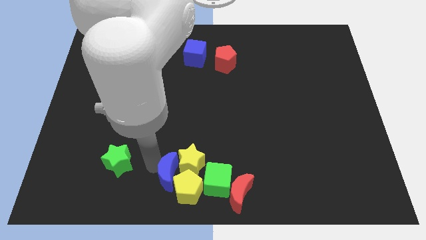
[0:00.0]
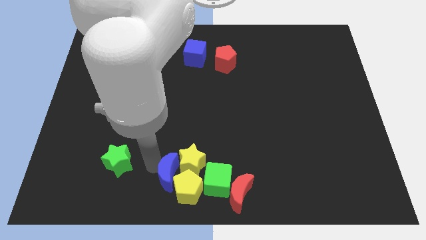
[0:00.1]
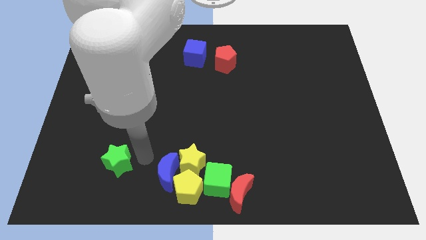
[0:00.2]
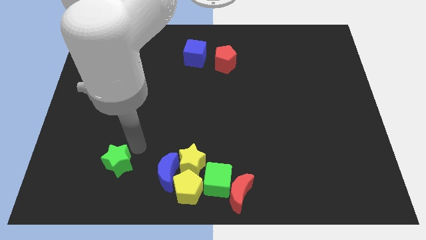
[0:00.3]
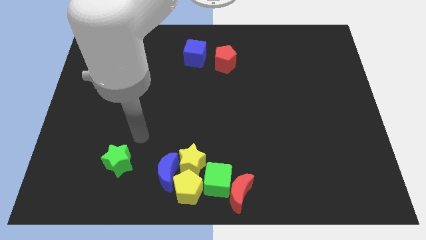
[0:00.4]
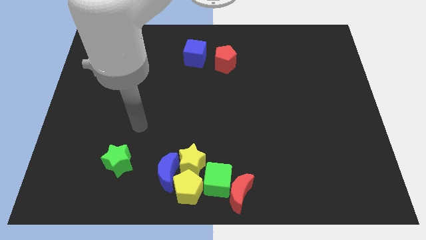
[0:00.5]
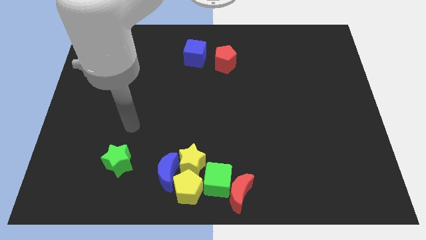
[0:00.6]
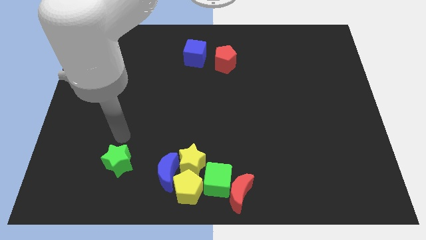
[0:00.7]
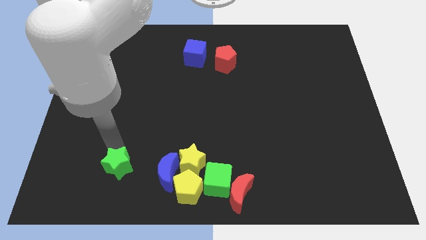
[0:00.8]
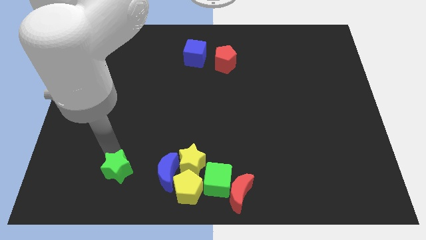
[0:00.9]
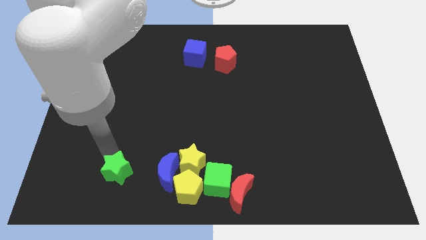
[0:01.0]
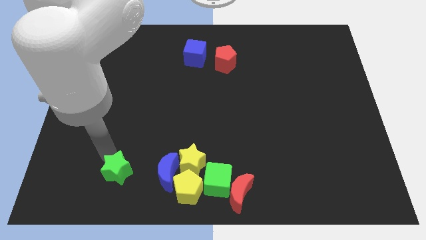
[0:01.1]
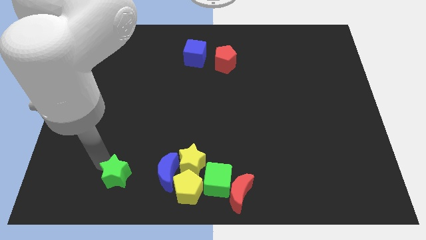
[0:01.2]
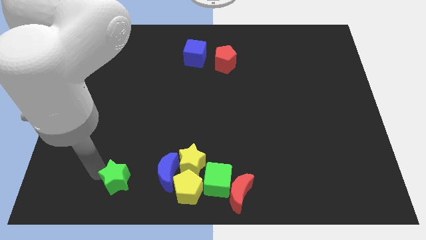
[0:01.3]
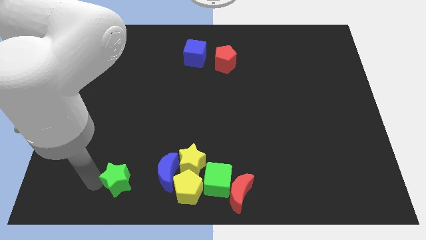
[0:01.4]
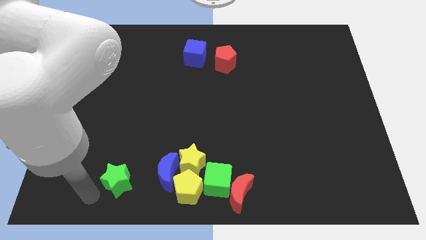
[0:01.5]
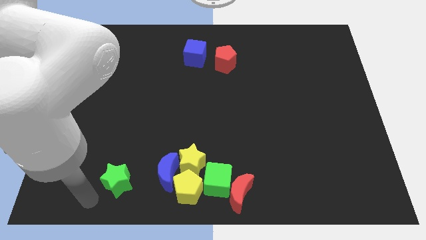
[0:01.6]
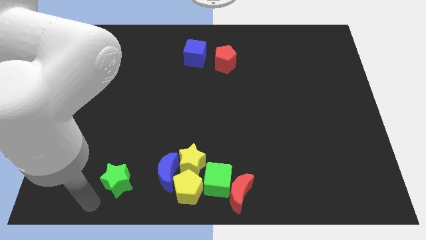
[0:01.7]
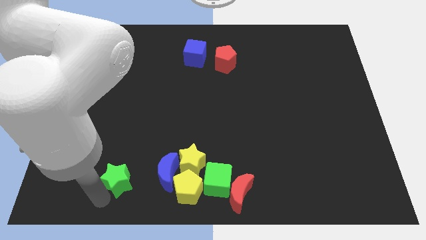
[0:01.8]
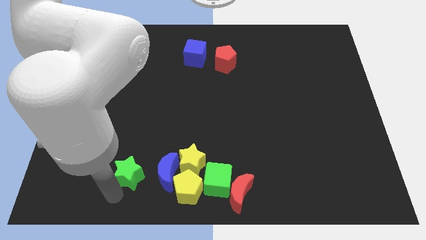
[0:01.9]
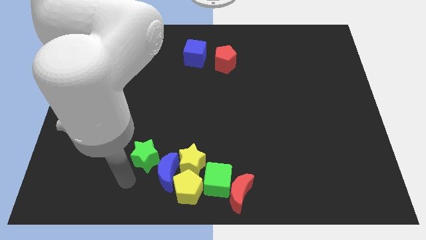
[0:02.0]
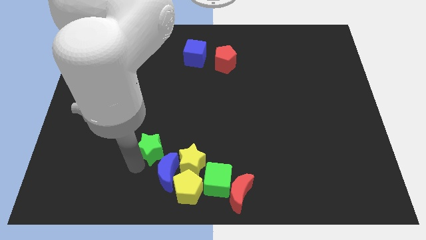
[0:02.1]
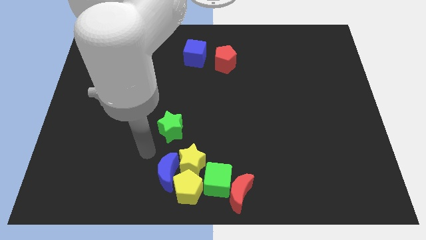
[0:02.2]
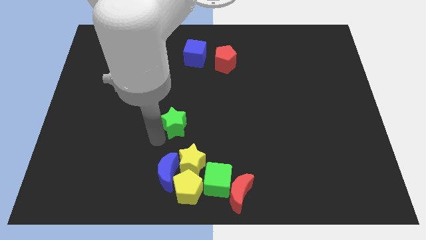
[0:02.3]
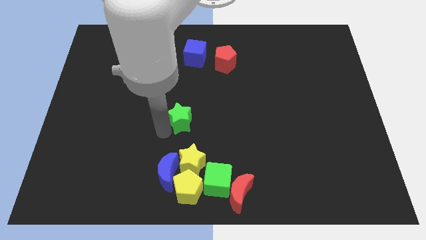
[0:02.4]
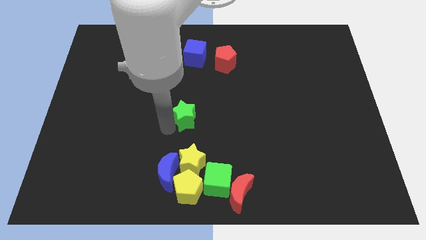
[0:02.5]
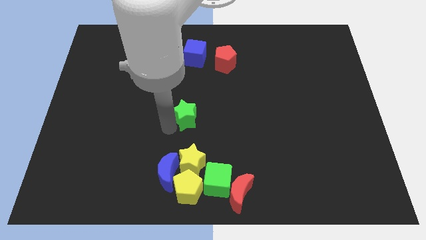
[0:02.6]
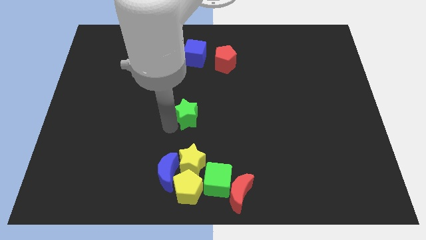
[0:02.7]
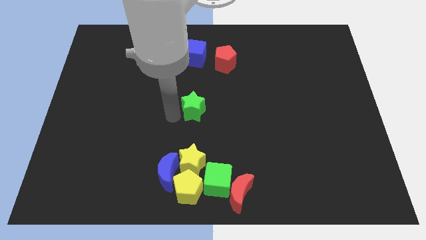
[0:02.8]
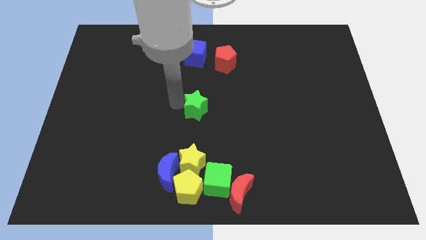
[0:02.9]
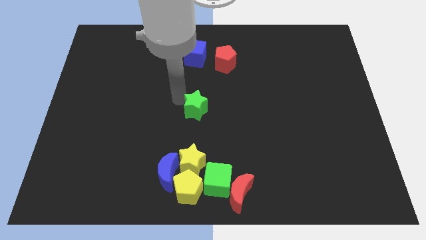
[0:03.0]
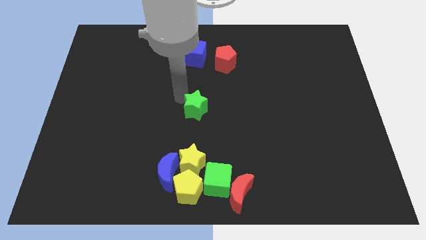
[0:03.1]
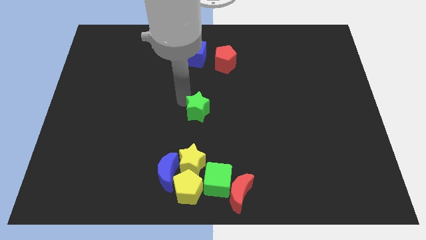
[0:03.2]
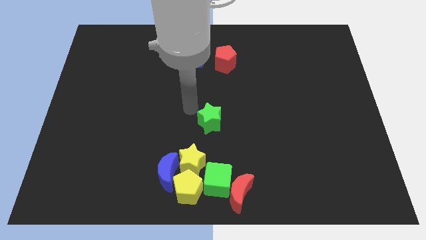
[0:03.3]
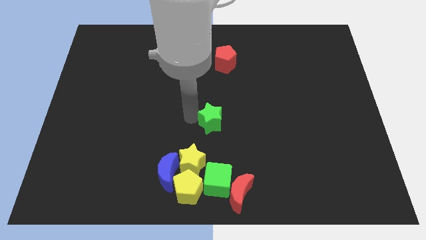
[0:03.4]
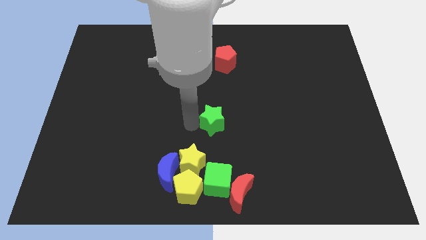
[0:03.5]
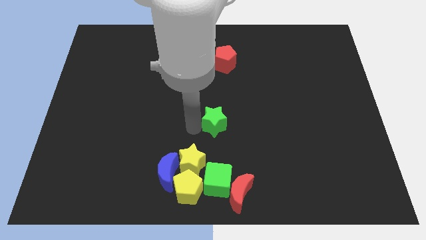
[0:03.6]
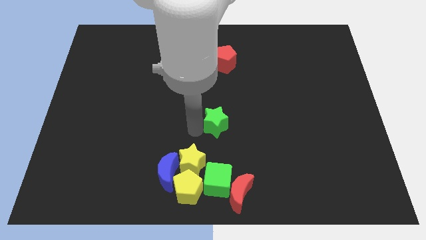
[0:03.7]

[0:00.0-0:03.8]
push green star to center of the board

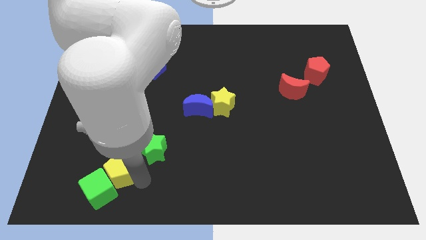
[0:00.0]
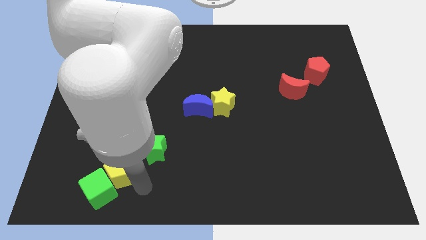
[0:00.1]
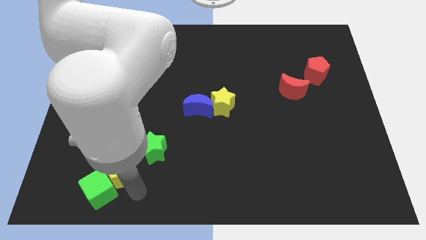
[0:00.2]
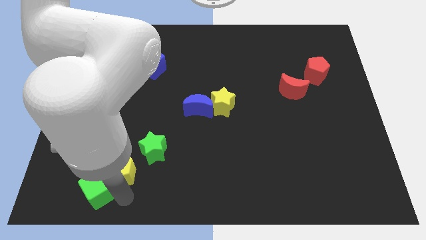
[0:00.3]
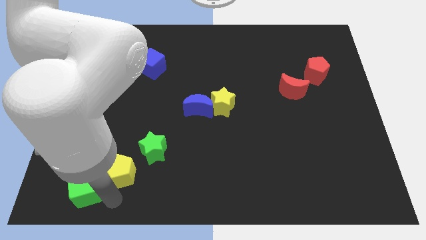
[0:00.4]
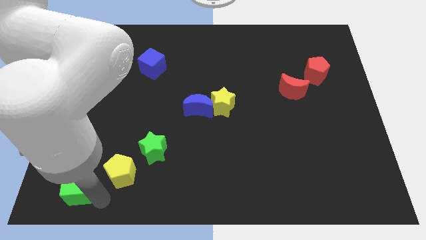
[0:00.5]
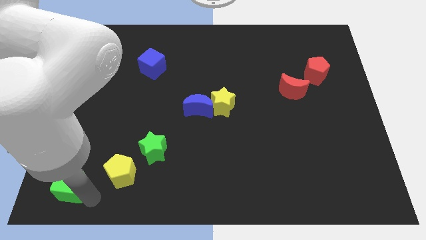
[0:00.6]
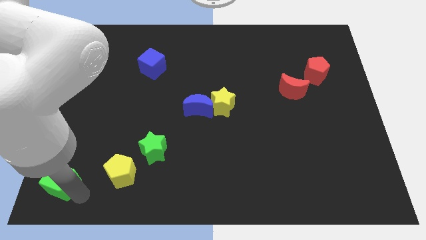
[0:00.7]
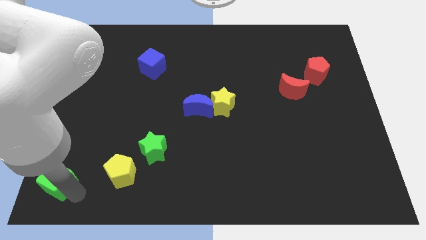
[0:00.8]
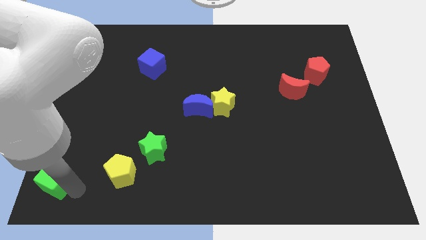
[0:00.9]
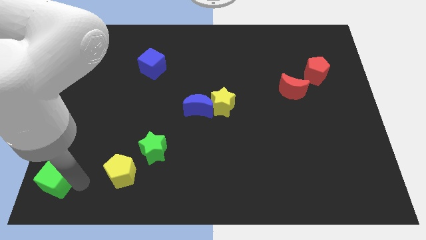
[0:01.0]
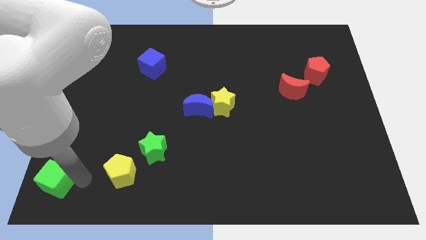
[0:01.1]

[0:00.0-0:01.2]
push the green cube to the bottom left corner of the board

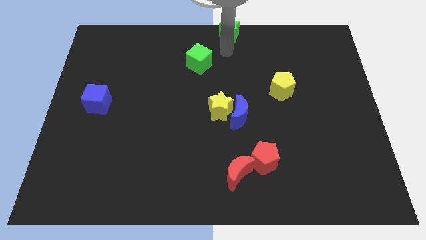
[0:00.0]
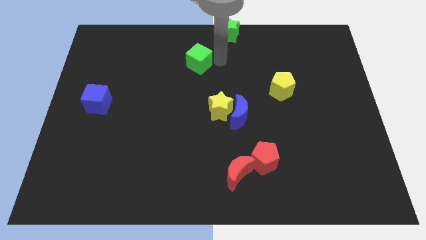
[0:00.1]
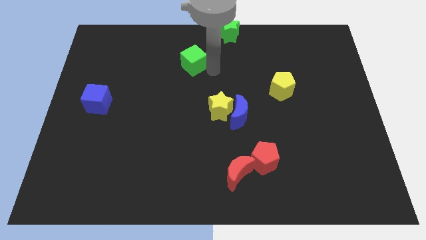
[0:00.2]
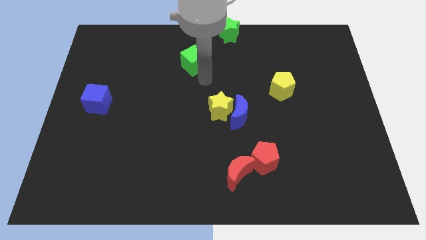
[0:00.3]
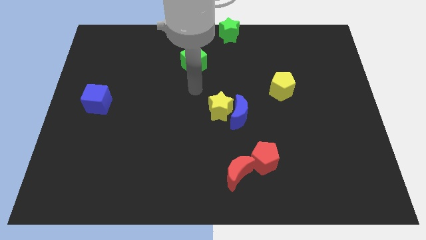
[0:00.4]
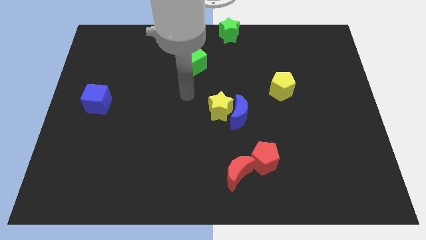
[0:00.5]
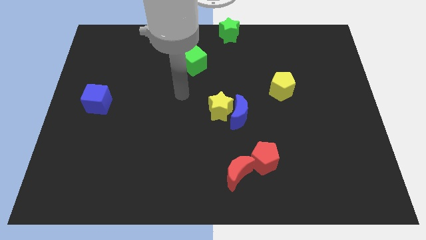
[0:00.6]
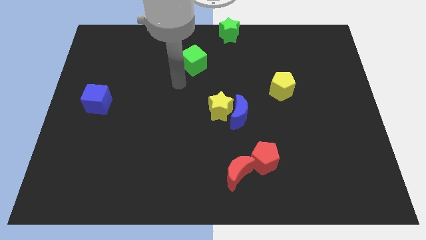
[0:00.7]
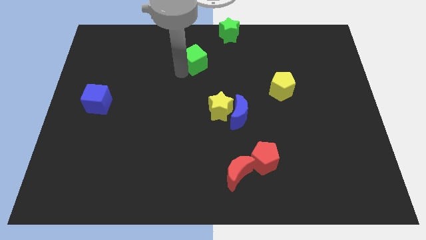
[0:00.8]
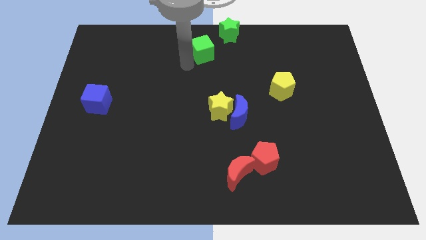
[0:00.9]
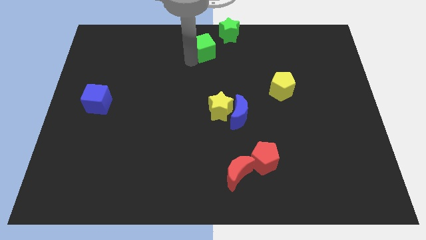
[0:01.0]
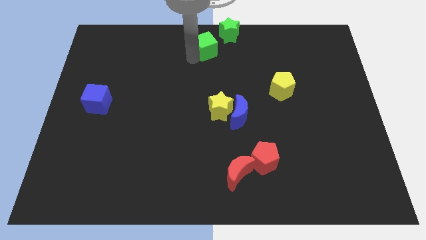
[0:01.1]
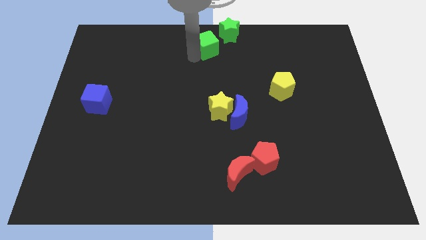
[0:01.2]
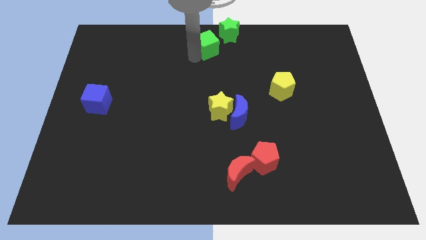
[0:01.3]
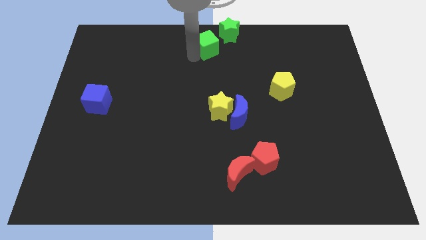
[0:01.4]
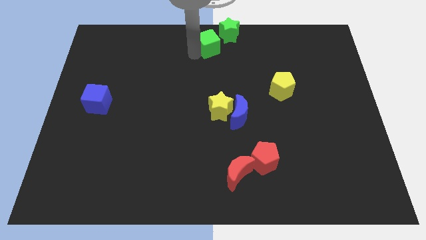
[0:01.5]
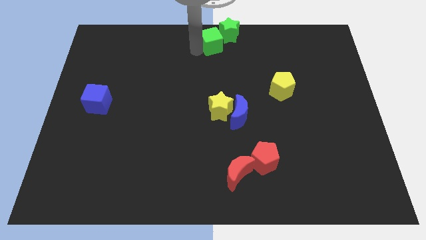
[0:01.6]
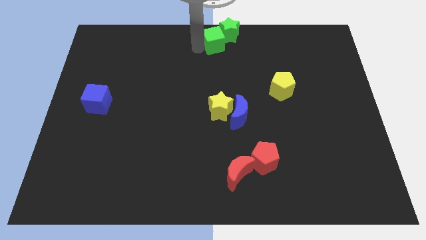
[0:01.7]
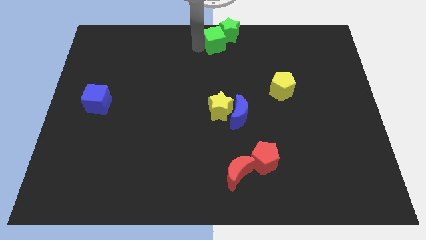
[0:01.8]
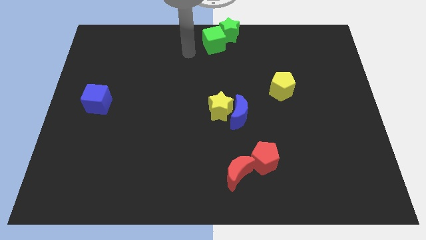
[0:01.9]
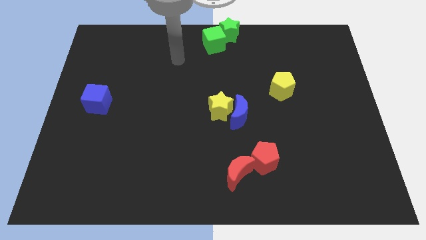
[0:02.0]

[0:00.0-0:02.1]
move green cube middle of the board

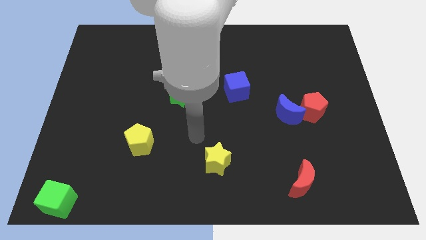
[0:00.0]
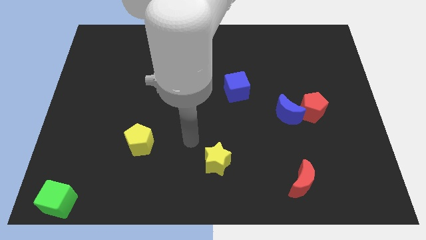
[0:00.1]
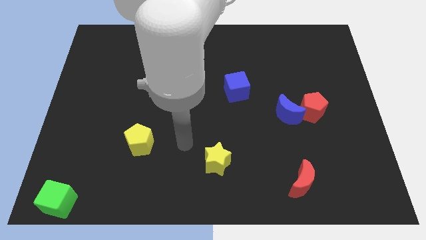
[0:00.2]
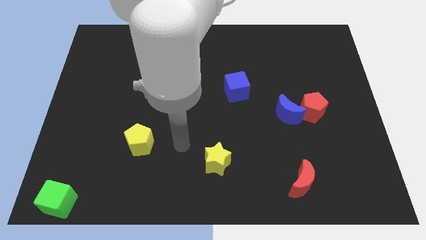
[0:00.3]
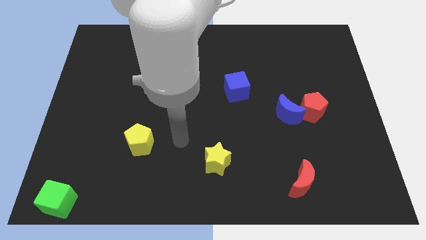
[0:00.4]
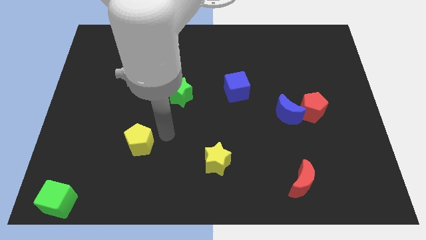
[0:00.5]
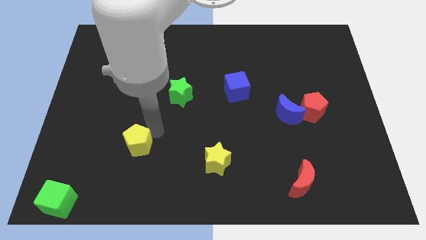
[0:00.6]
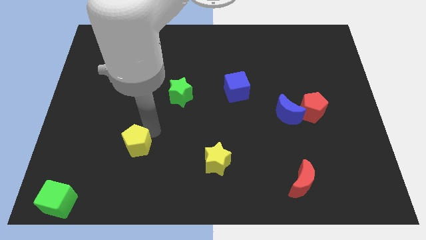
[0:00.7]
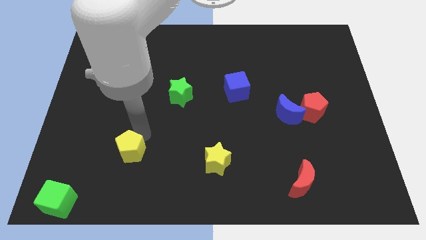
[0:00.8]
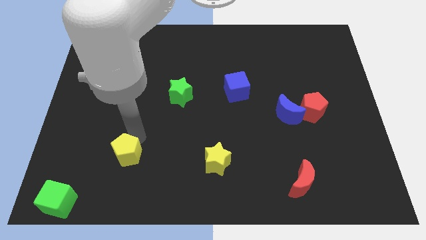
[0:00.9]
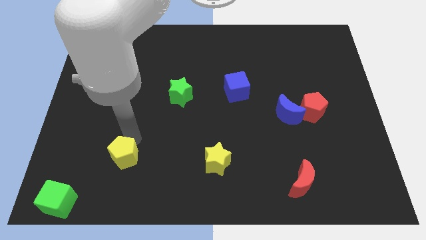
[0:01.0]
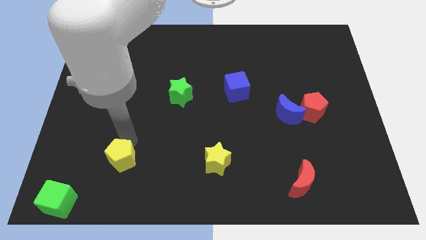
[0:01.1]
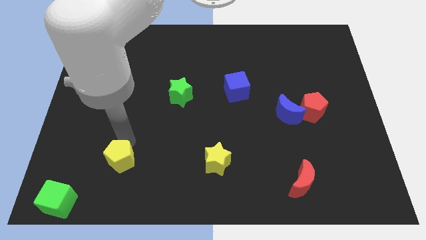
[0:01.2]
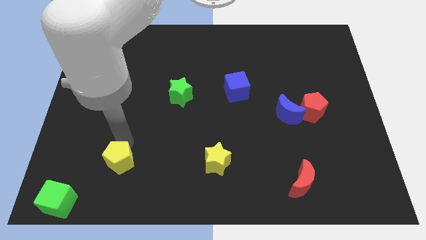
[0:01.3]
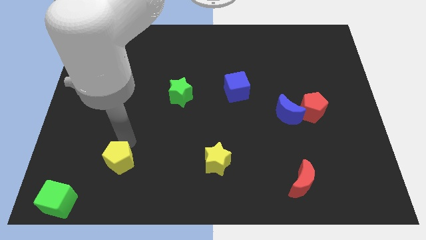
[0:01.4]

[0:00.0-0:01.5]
move the yellow pentagon to the bottom left of the board

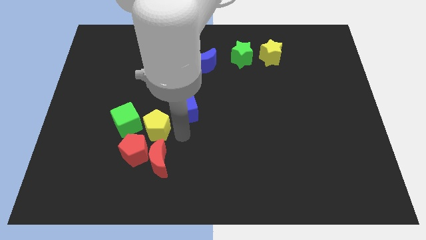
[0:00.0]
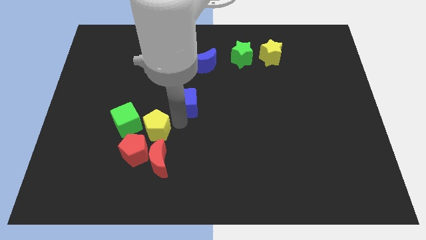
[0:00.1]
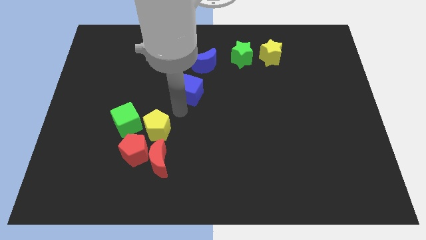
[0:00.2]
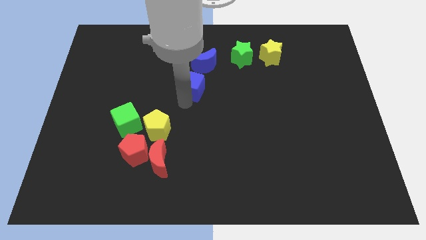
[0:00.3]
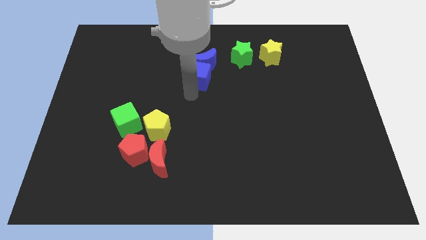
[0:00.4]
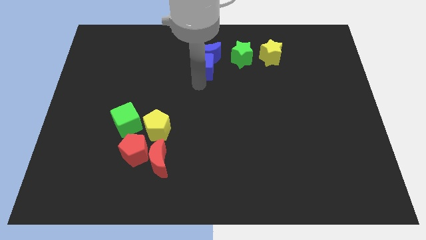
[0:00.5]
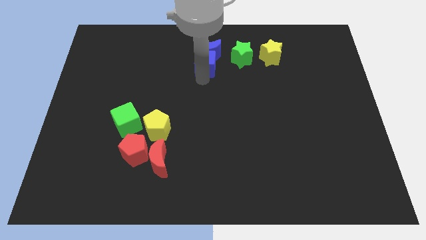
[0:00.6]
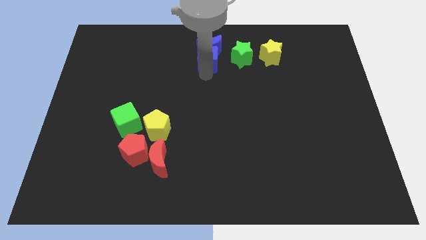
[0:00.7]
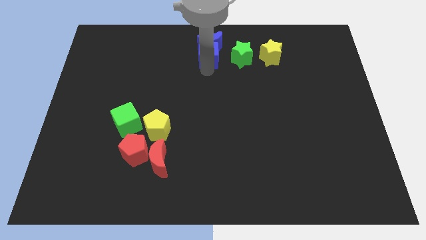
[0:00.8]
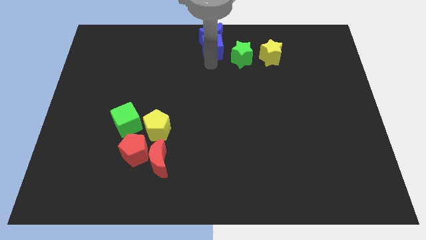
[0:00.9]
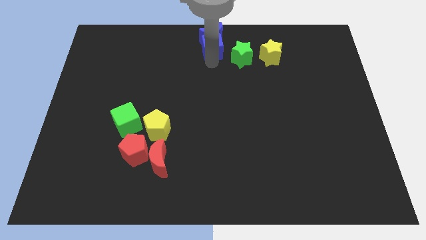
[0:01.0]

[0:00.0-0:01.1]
push the blue cube into the blue moon
